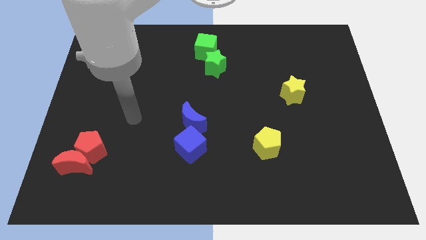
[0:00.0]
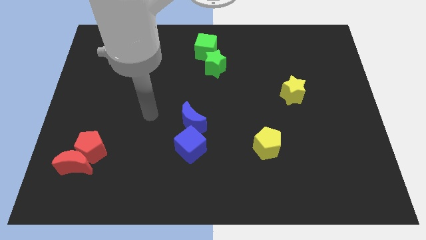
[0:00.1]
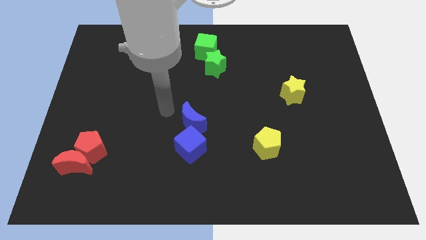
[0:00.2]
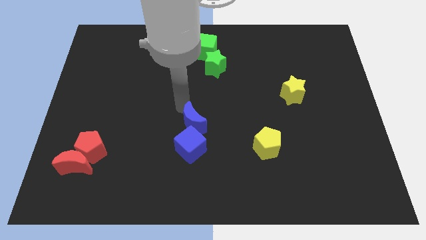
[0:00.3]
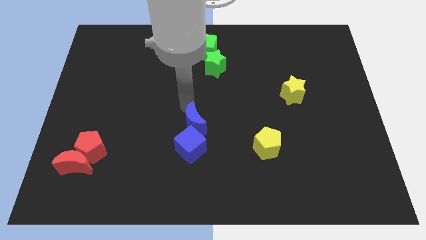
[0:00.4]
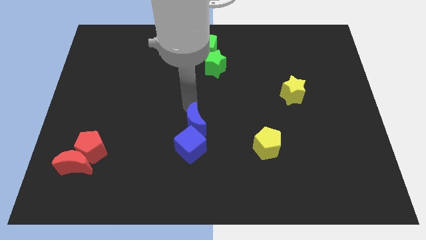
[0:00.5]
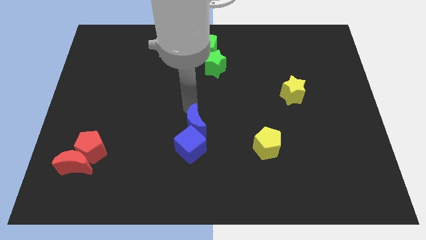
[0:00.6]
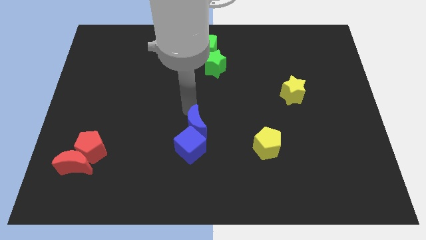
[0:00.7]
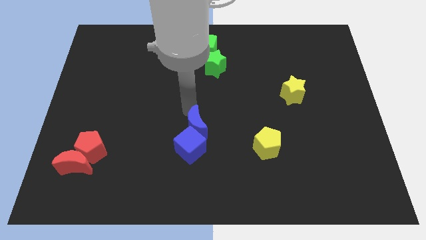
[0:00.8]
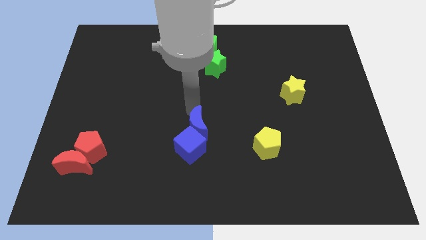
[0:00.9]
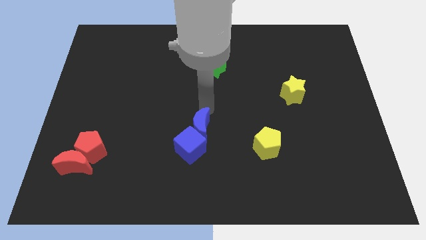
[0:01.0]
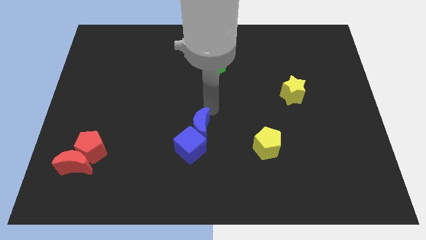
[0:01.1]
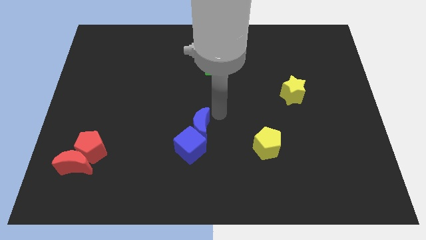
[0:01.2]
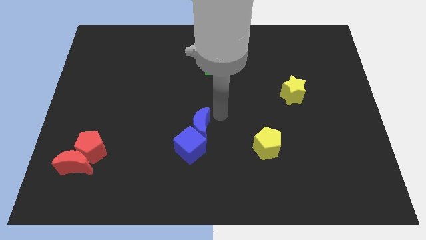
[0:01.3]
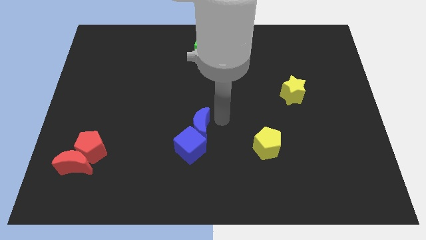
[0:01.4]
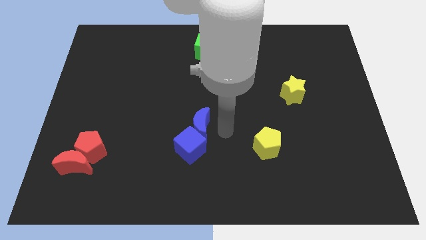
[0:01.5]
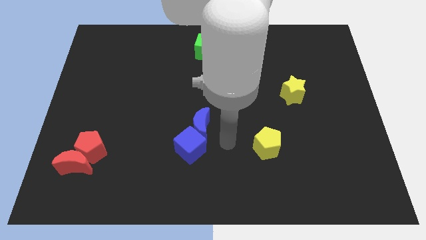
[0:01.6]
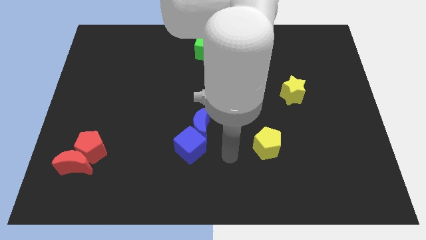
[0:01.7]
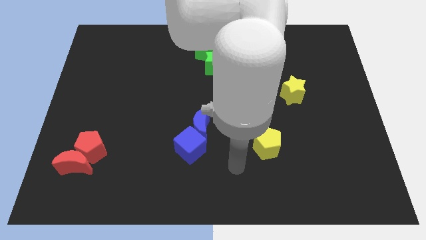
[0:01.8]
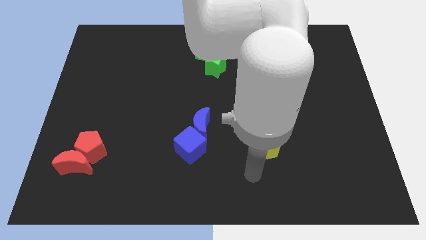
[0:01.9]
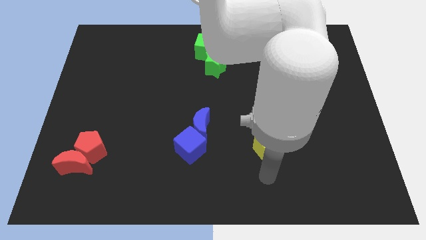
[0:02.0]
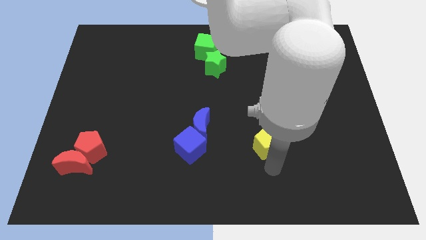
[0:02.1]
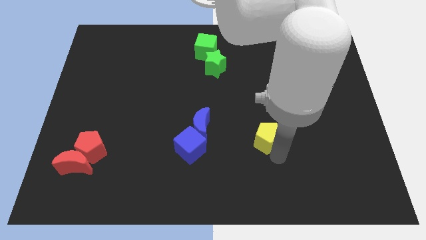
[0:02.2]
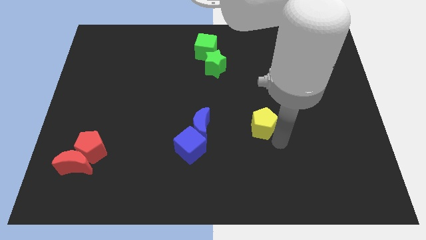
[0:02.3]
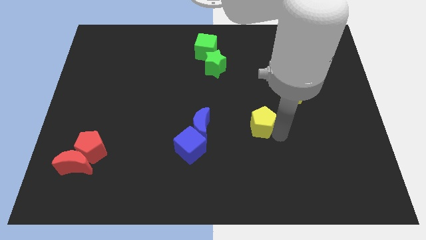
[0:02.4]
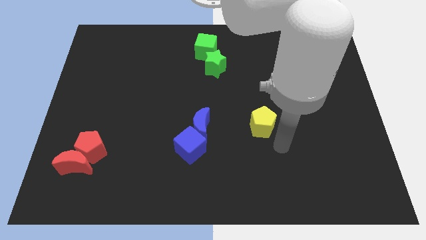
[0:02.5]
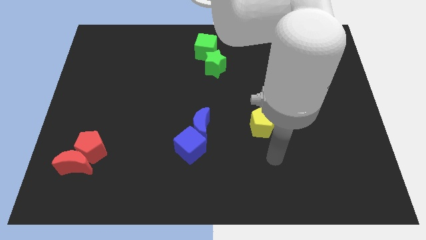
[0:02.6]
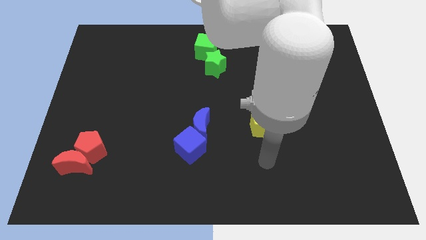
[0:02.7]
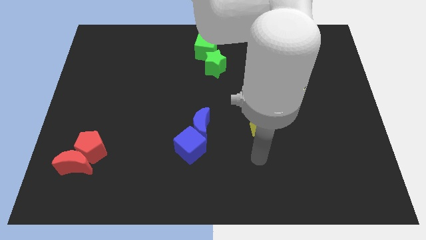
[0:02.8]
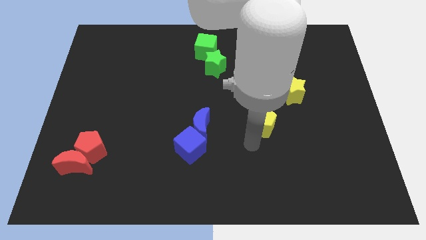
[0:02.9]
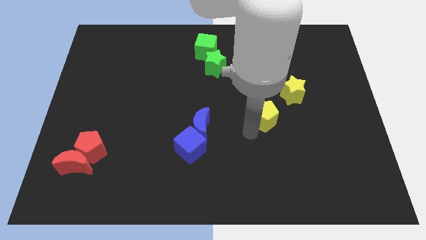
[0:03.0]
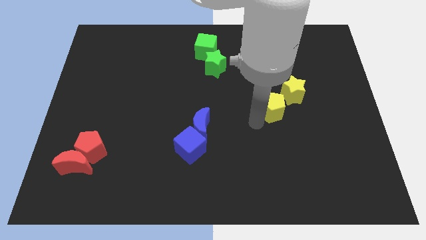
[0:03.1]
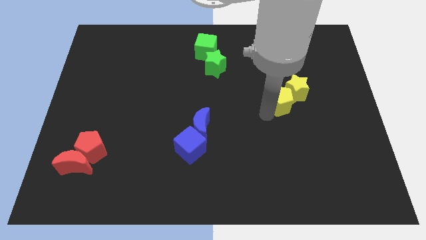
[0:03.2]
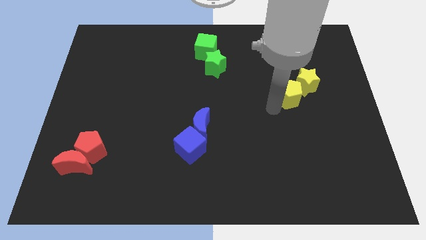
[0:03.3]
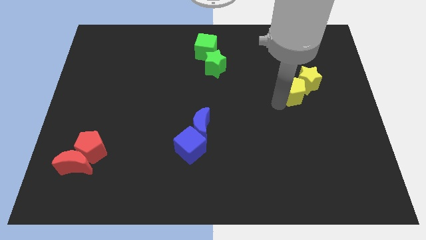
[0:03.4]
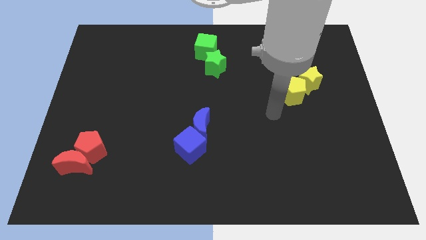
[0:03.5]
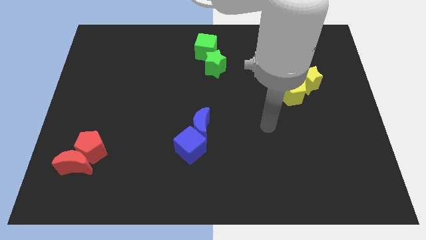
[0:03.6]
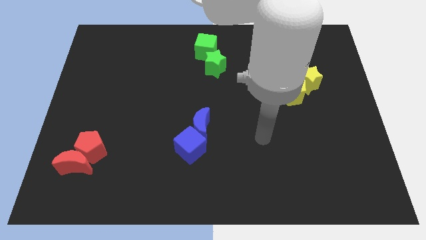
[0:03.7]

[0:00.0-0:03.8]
slide the yellow pentagon into the yellow star

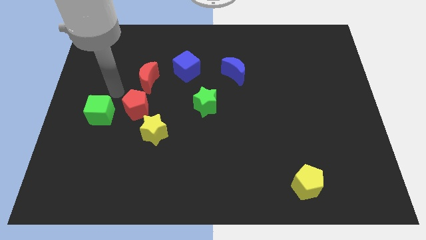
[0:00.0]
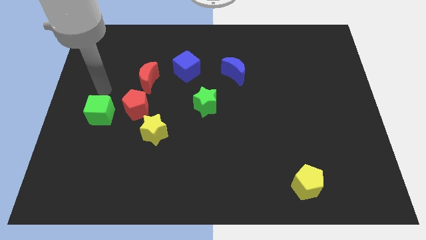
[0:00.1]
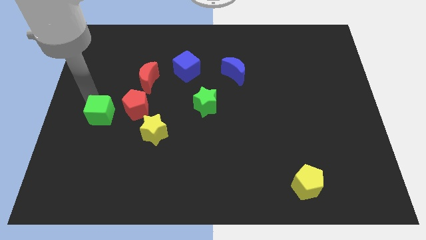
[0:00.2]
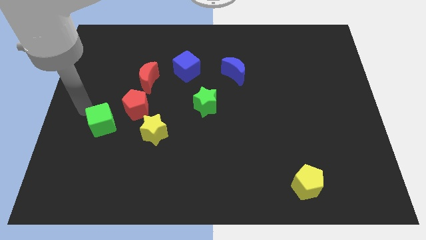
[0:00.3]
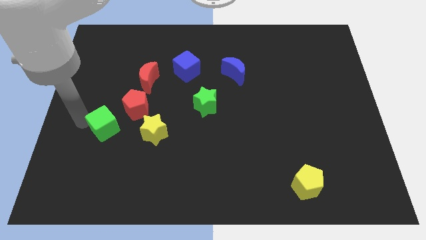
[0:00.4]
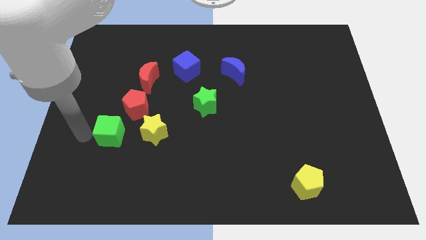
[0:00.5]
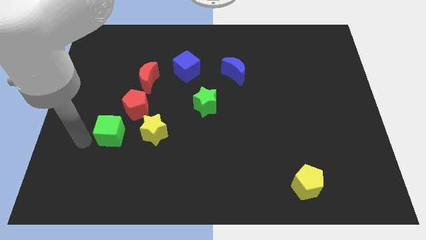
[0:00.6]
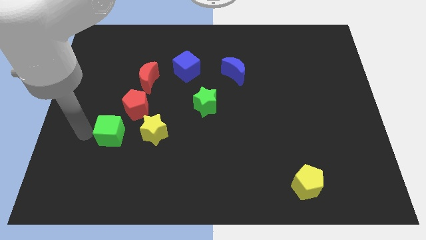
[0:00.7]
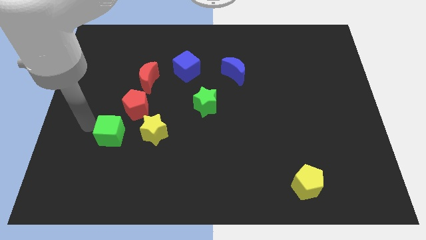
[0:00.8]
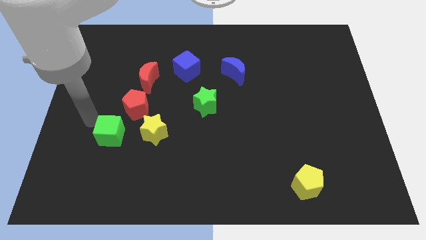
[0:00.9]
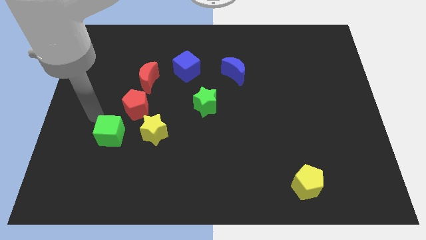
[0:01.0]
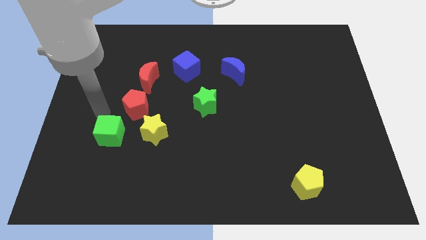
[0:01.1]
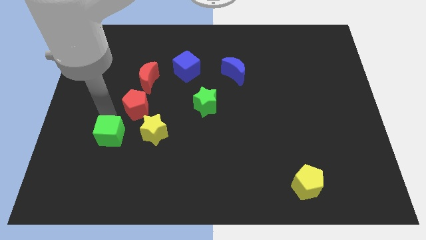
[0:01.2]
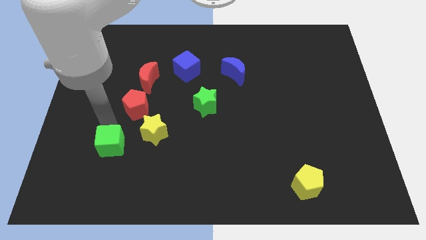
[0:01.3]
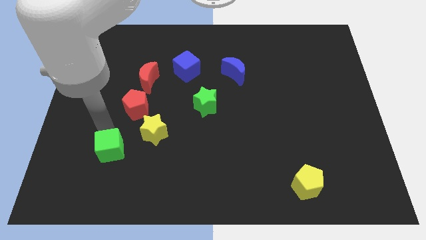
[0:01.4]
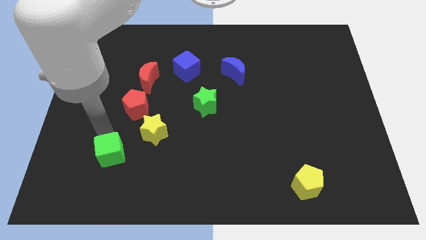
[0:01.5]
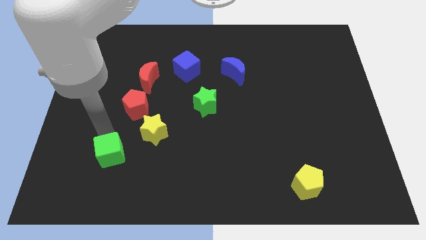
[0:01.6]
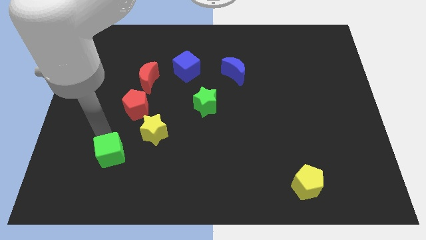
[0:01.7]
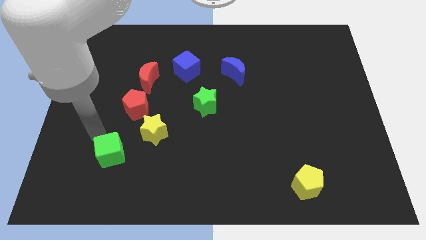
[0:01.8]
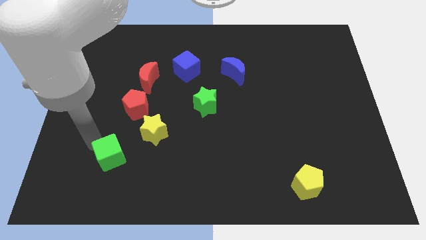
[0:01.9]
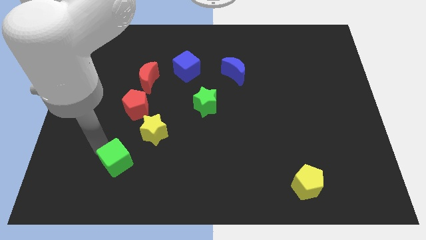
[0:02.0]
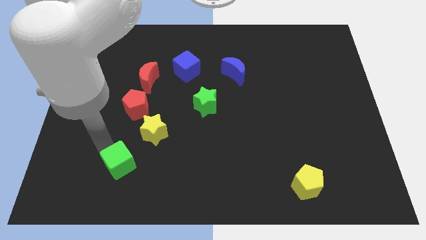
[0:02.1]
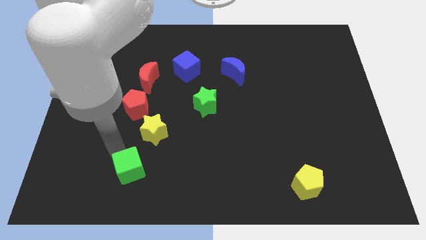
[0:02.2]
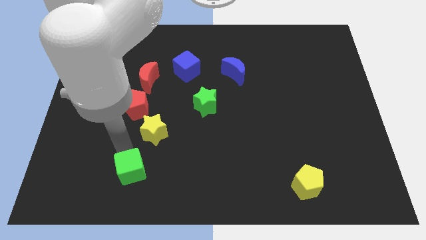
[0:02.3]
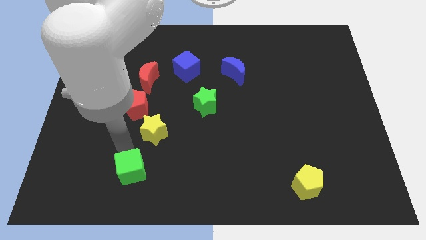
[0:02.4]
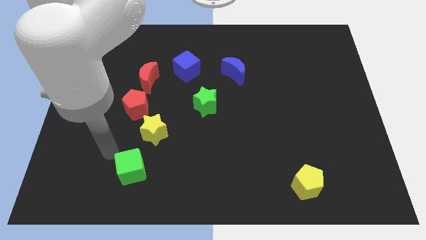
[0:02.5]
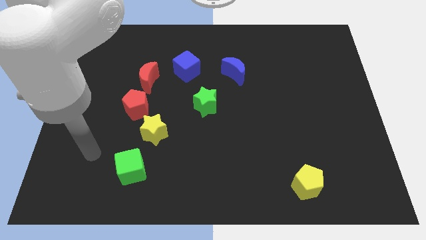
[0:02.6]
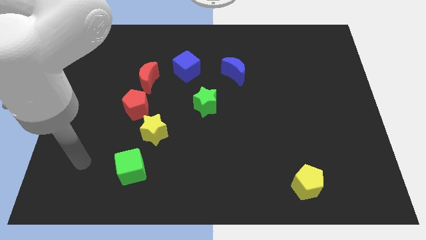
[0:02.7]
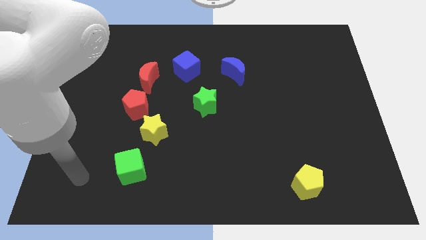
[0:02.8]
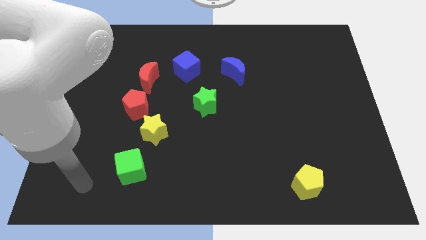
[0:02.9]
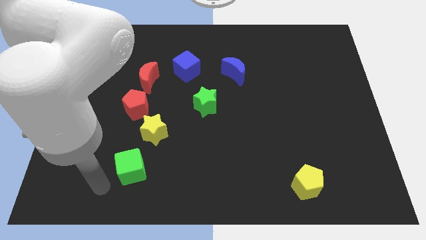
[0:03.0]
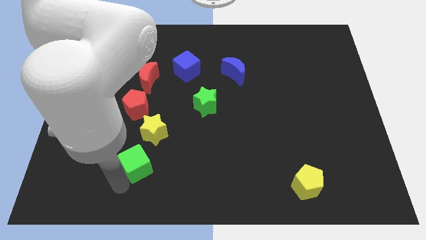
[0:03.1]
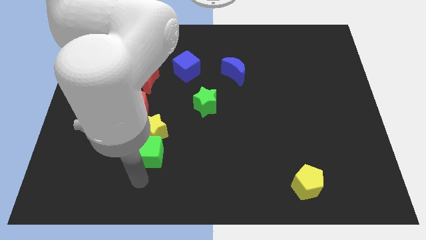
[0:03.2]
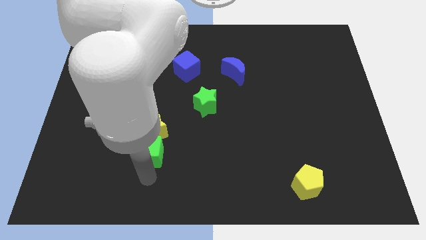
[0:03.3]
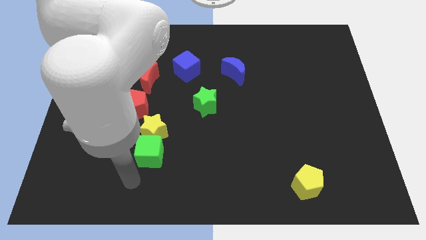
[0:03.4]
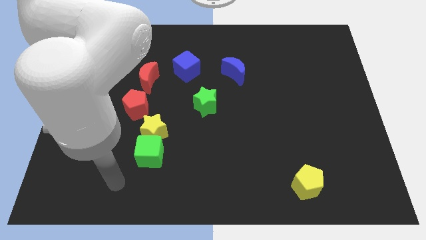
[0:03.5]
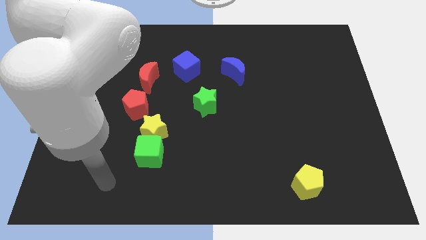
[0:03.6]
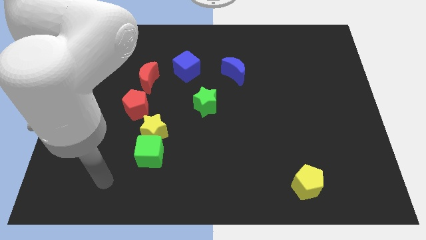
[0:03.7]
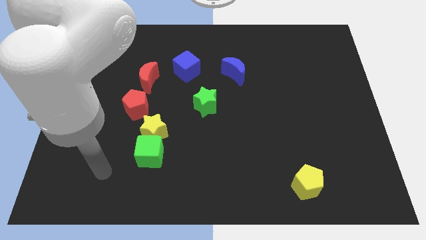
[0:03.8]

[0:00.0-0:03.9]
push the green cube into the yellow star

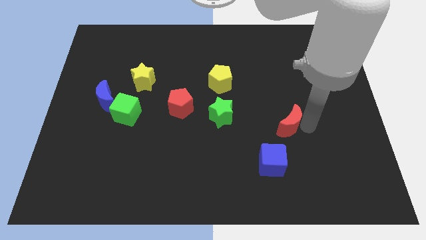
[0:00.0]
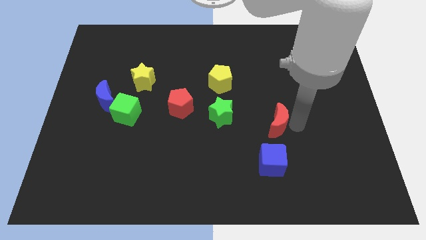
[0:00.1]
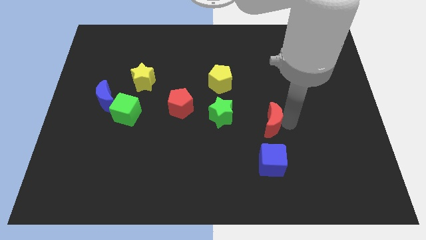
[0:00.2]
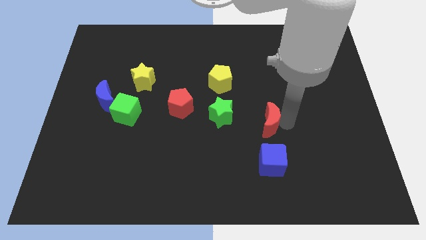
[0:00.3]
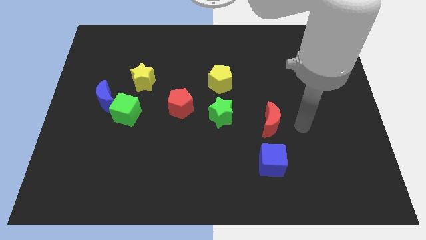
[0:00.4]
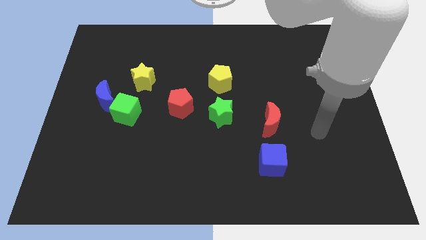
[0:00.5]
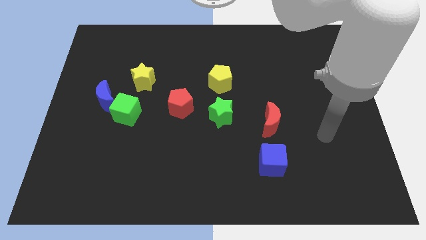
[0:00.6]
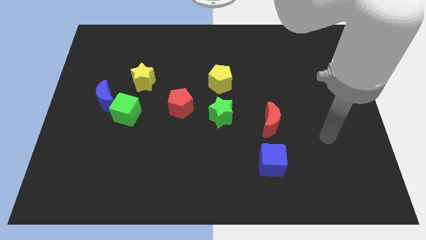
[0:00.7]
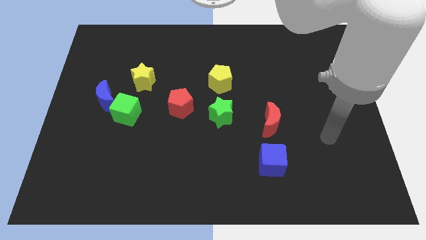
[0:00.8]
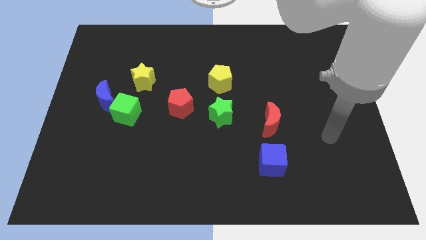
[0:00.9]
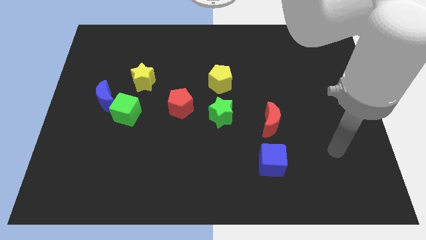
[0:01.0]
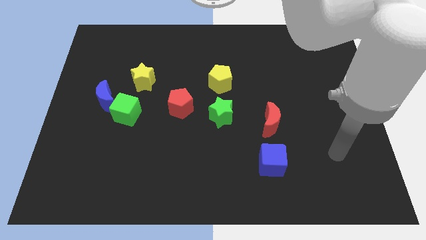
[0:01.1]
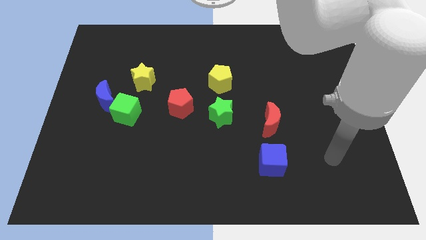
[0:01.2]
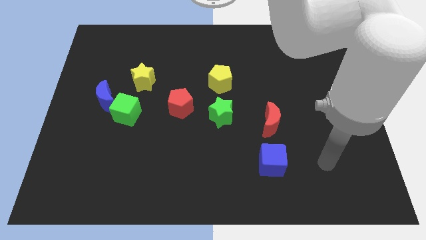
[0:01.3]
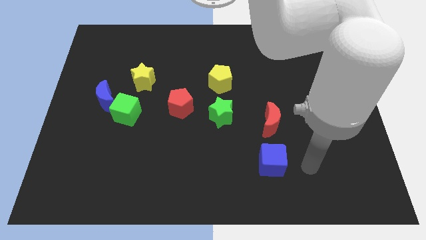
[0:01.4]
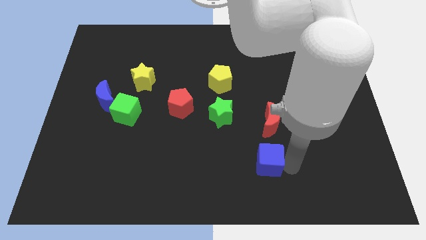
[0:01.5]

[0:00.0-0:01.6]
push red moon to the right of green star
